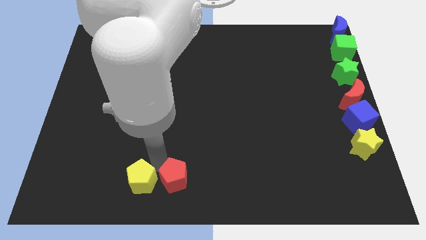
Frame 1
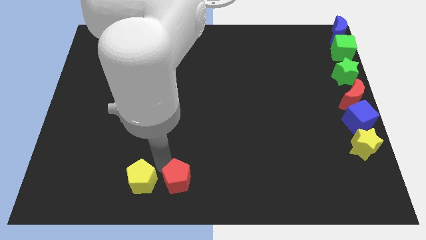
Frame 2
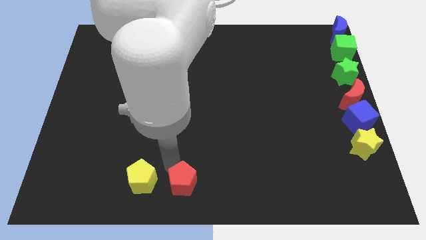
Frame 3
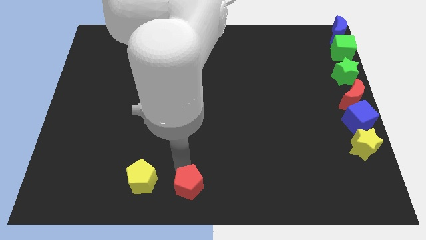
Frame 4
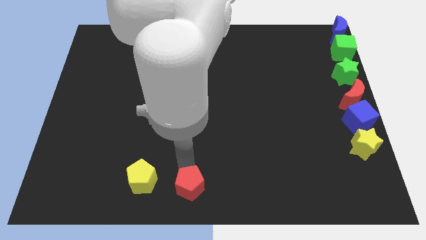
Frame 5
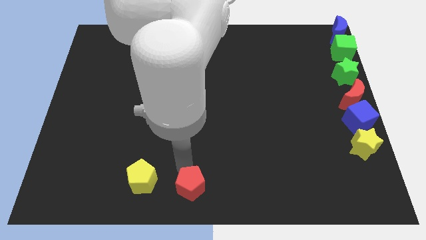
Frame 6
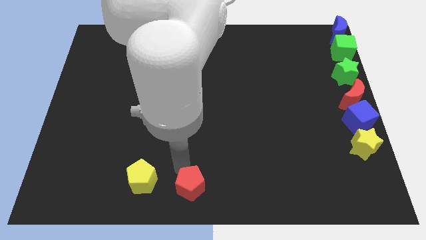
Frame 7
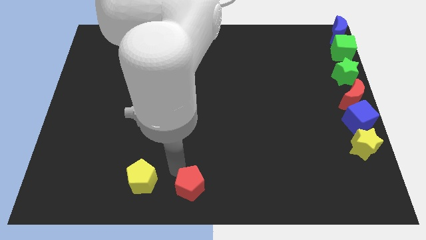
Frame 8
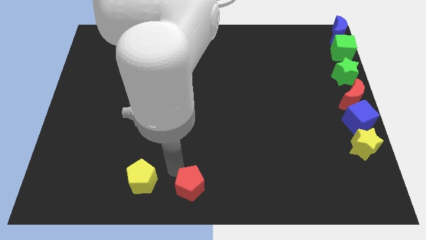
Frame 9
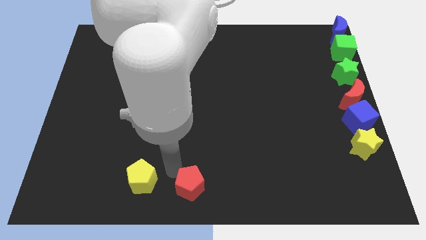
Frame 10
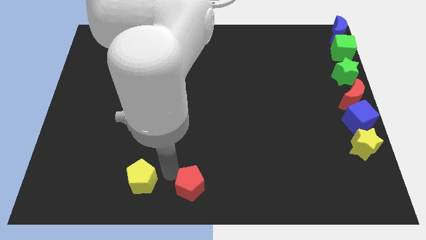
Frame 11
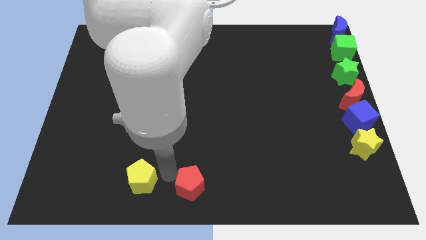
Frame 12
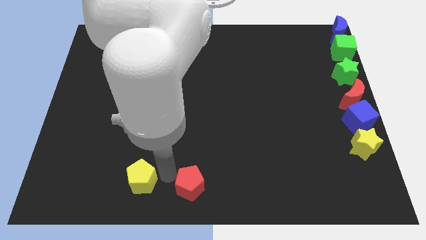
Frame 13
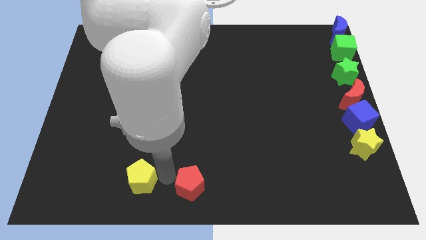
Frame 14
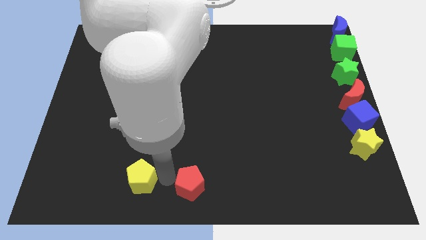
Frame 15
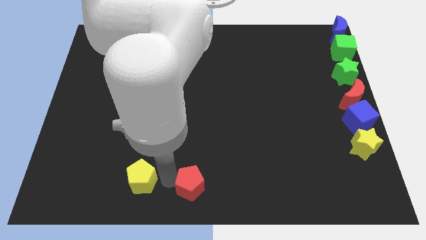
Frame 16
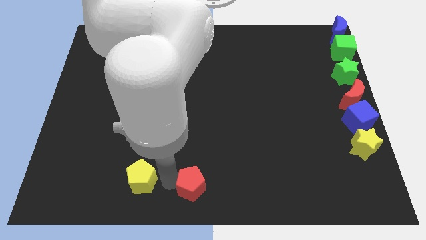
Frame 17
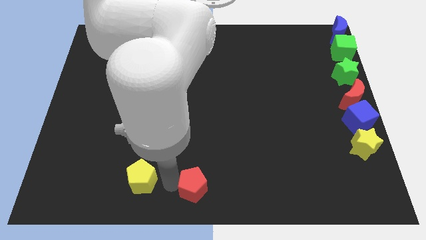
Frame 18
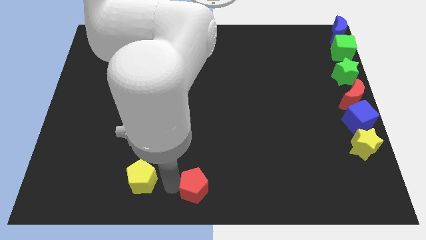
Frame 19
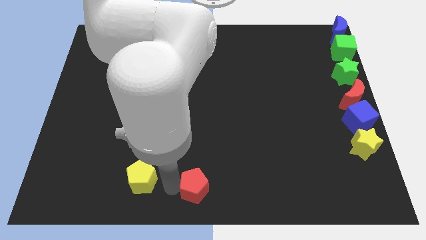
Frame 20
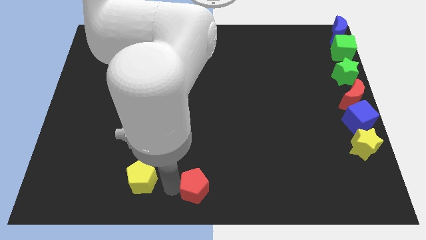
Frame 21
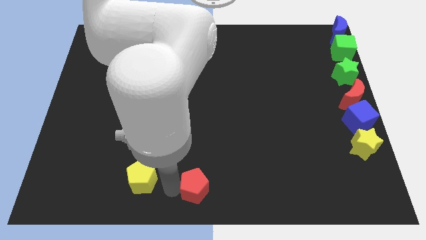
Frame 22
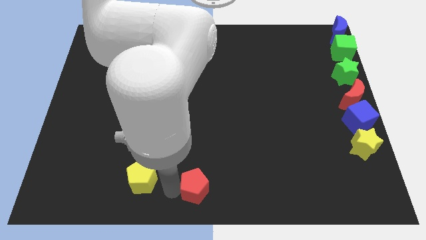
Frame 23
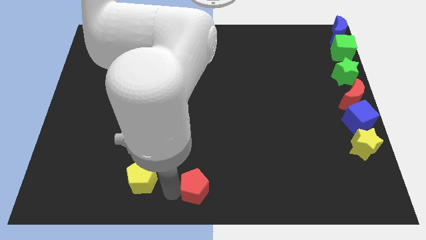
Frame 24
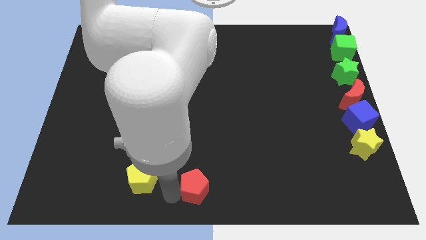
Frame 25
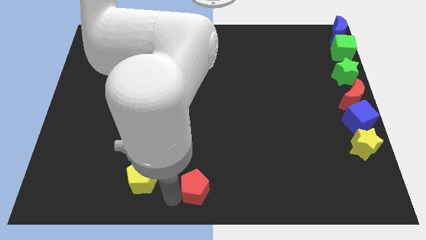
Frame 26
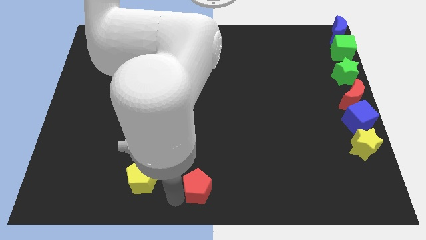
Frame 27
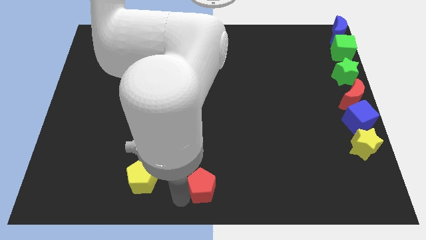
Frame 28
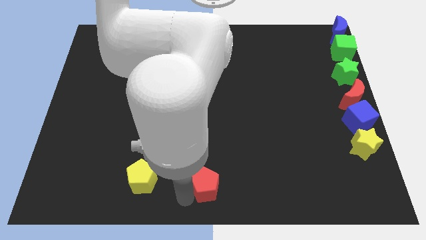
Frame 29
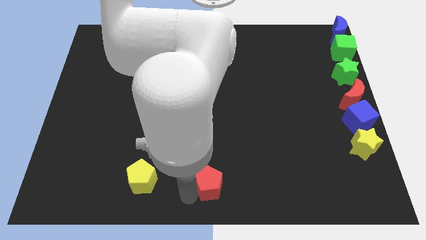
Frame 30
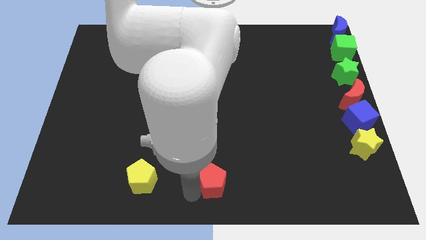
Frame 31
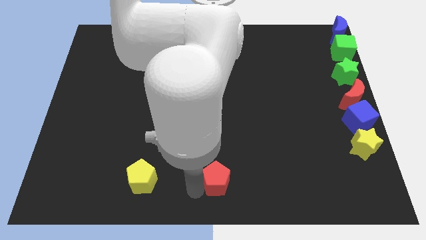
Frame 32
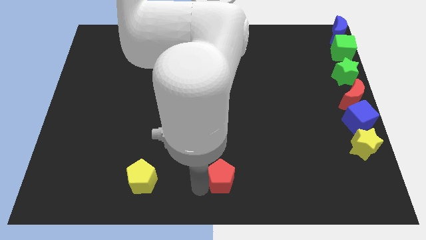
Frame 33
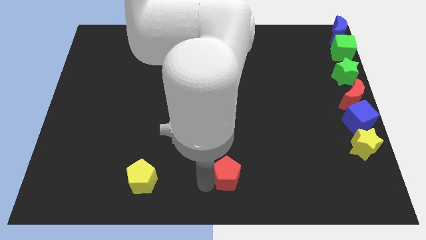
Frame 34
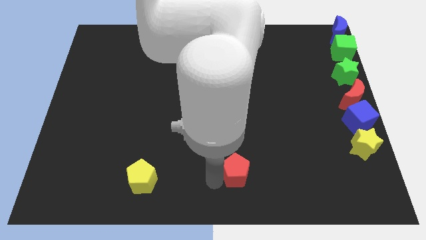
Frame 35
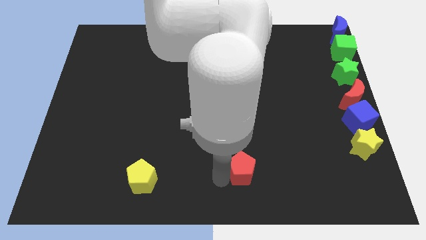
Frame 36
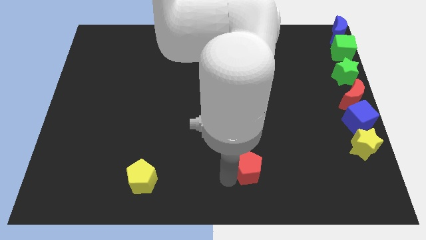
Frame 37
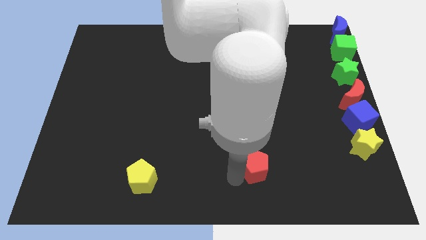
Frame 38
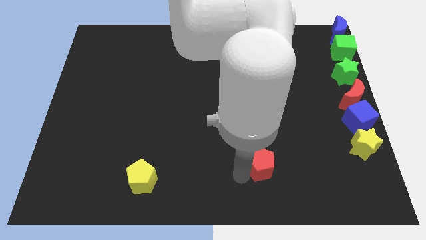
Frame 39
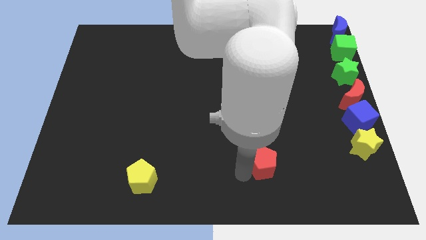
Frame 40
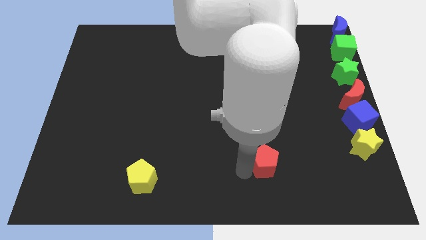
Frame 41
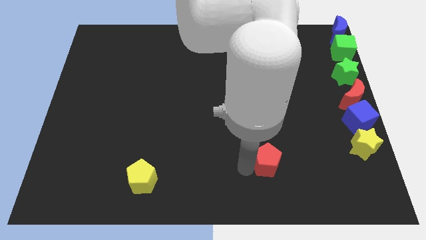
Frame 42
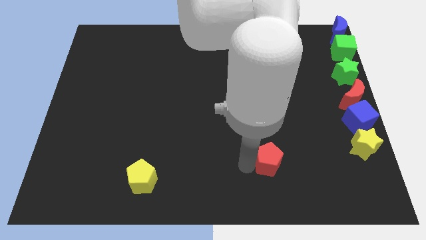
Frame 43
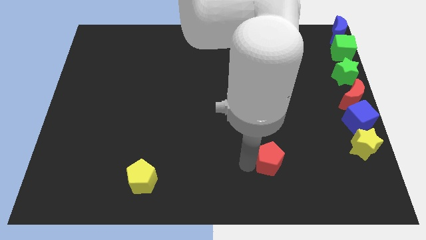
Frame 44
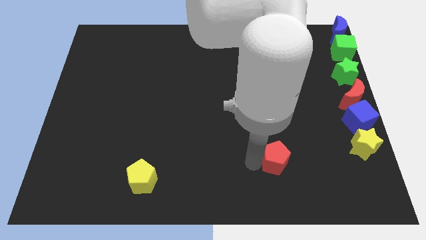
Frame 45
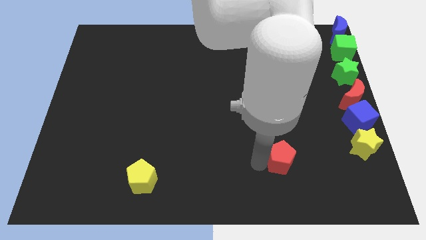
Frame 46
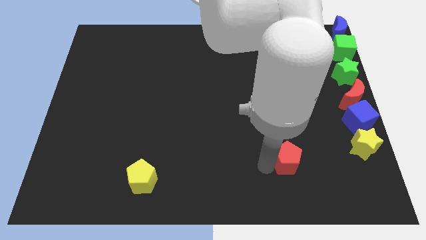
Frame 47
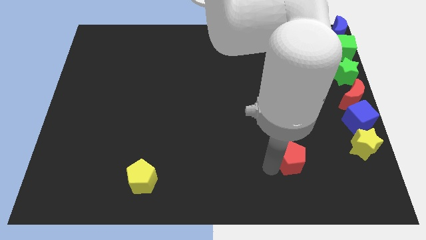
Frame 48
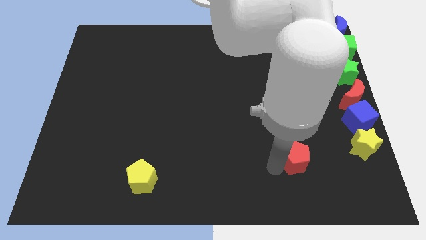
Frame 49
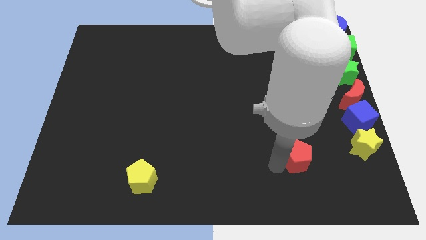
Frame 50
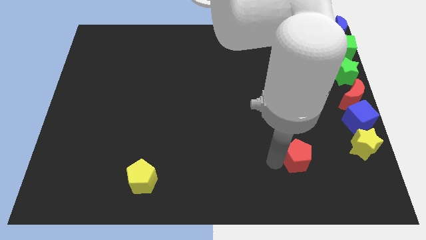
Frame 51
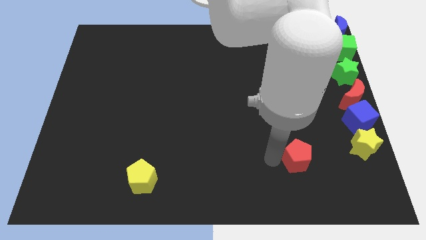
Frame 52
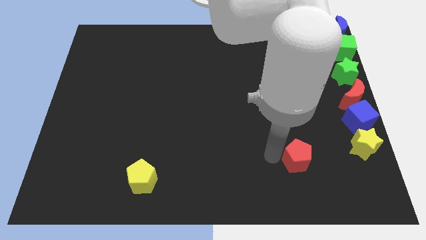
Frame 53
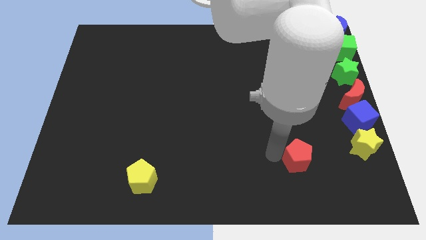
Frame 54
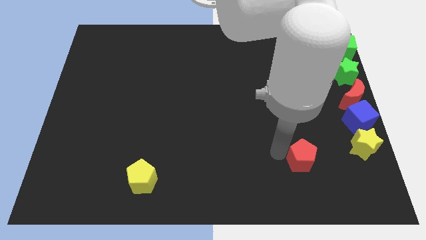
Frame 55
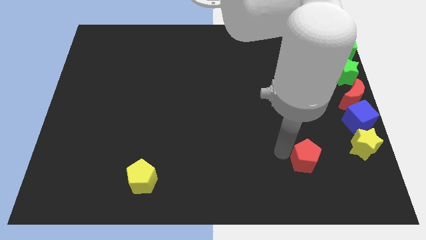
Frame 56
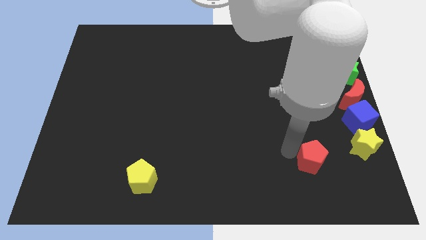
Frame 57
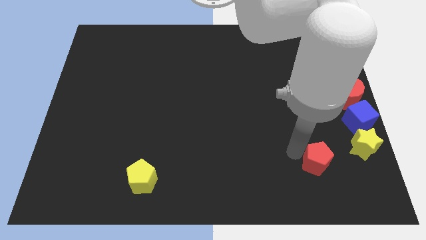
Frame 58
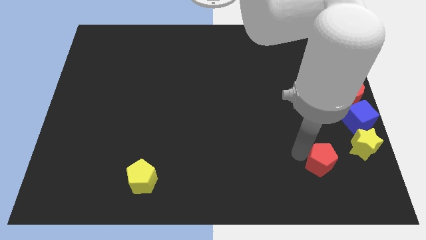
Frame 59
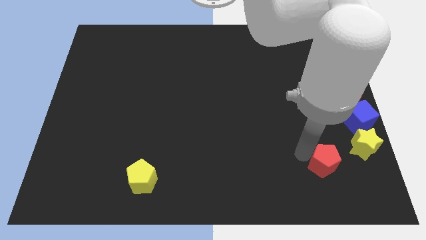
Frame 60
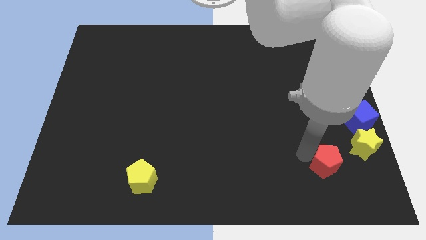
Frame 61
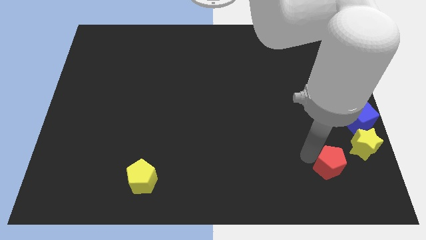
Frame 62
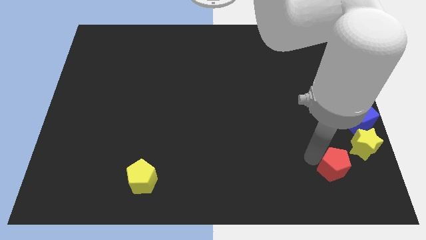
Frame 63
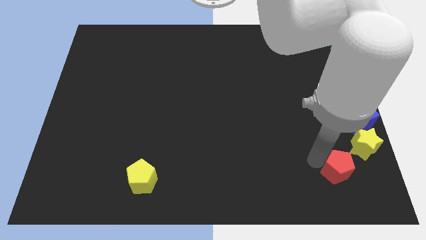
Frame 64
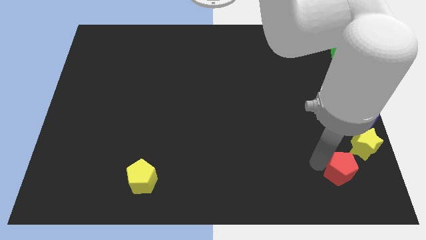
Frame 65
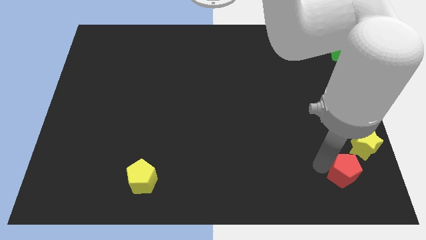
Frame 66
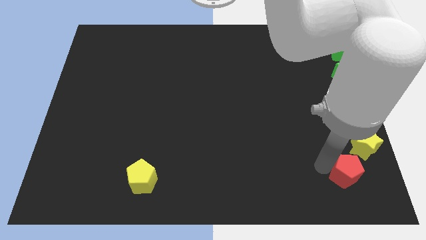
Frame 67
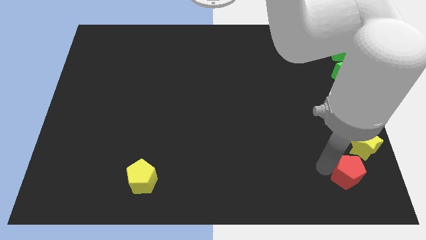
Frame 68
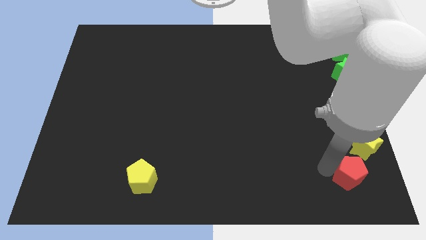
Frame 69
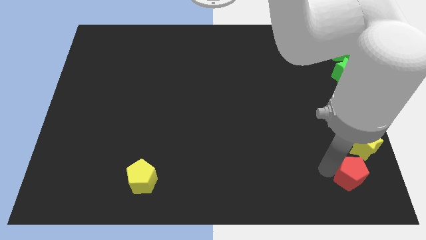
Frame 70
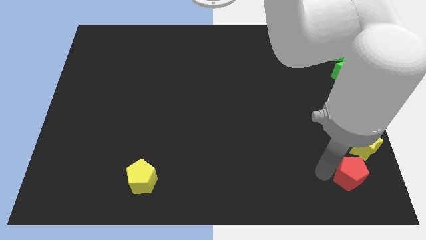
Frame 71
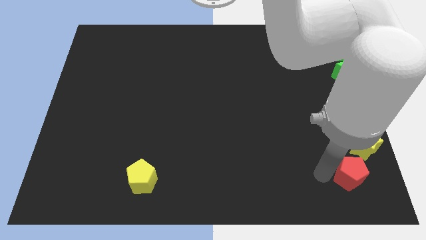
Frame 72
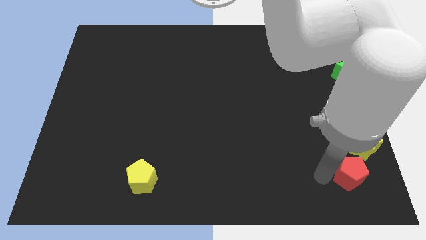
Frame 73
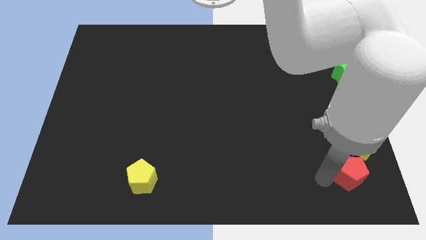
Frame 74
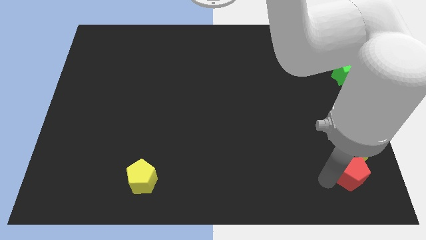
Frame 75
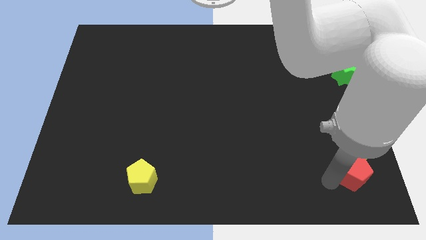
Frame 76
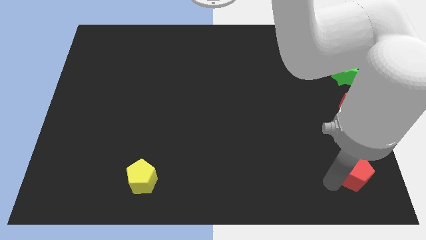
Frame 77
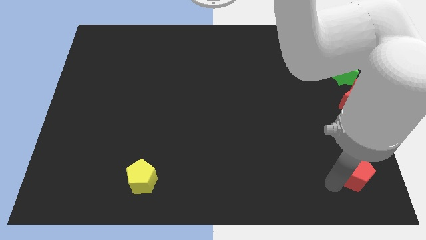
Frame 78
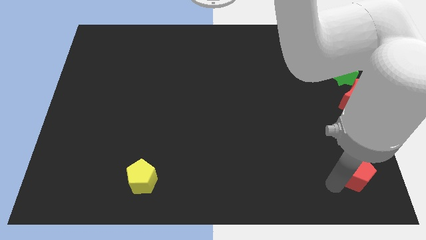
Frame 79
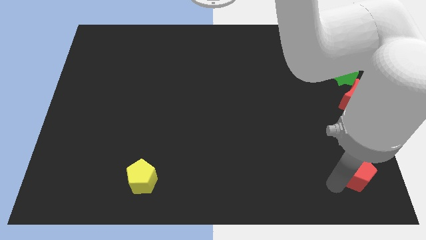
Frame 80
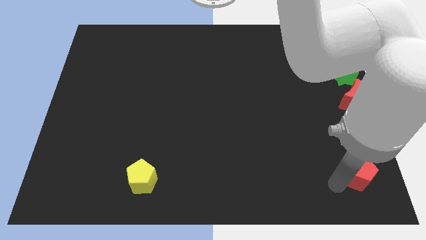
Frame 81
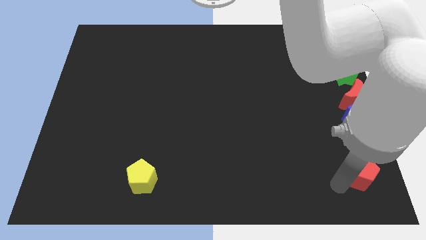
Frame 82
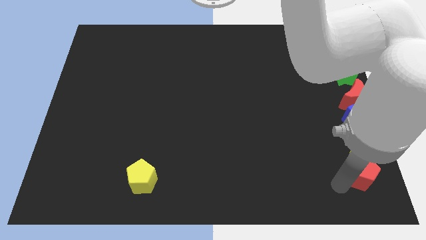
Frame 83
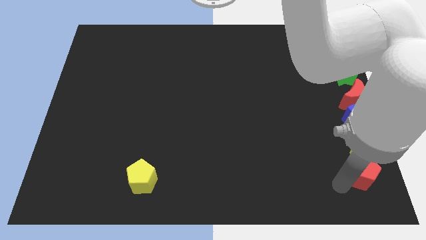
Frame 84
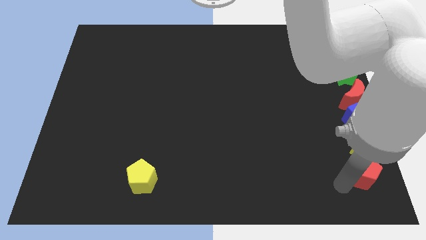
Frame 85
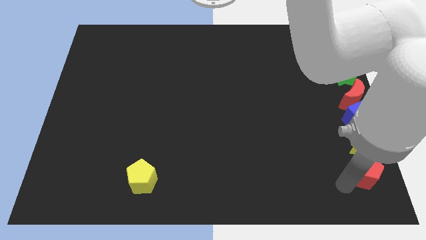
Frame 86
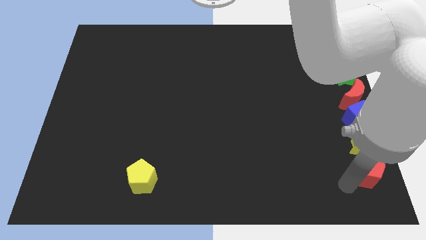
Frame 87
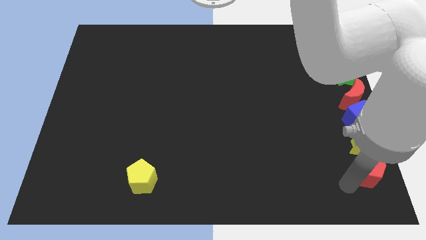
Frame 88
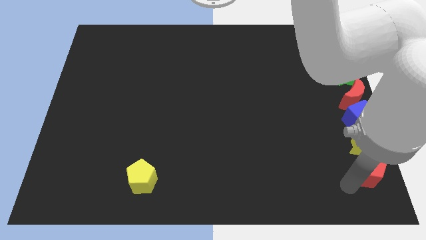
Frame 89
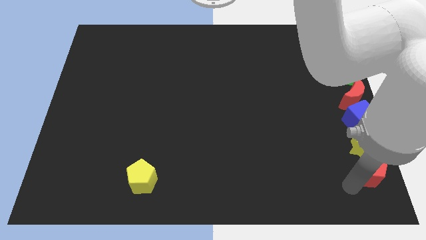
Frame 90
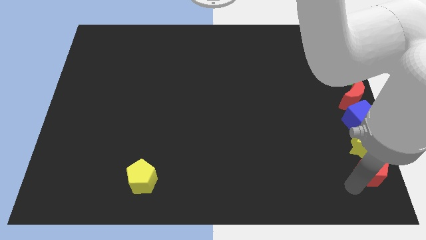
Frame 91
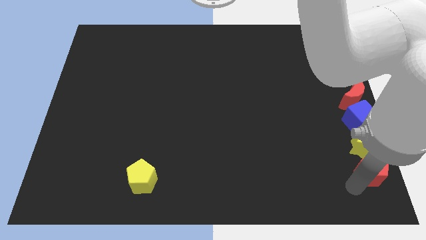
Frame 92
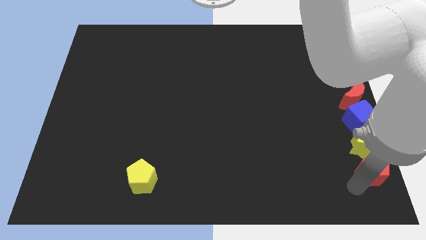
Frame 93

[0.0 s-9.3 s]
move the red pentagon to the yellow star
